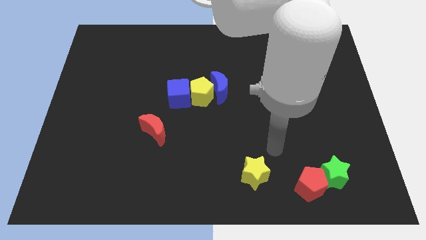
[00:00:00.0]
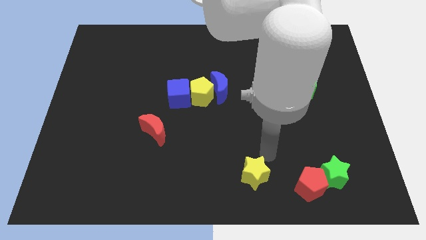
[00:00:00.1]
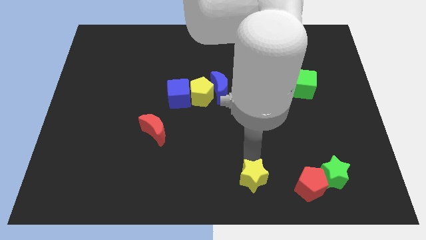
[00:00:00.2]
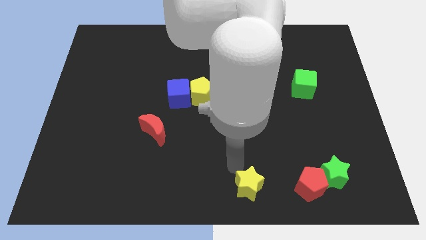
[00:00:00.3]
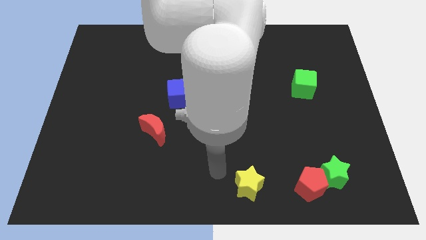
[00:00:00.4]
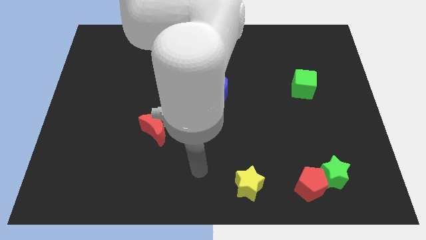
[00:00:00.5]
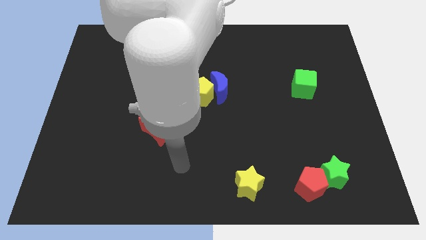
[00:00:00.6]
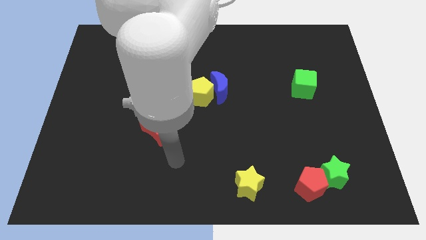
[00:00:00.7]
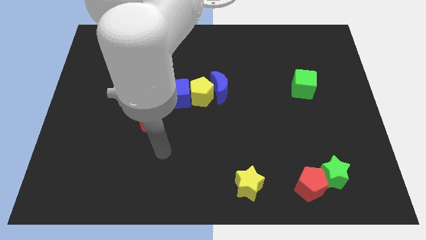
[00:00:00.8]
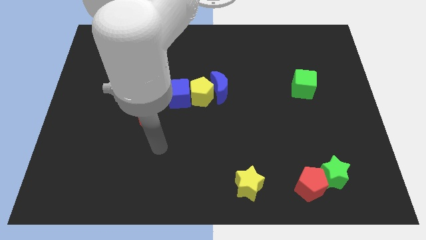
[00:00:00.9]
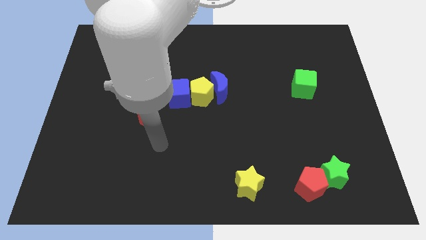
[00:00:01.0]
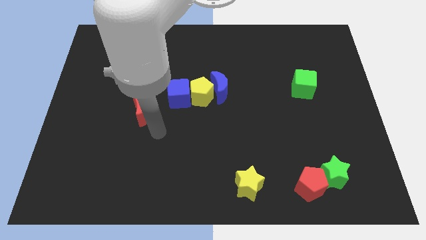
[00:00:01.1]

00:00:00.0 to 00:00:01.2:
move your arm towards the red crescent

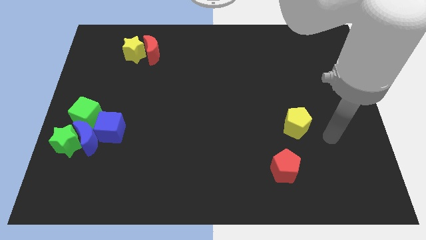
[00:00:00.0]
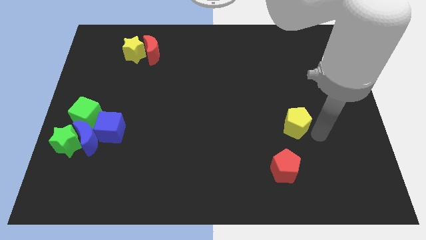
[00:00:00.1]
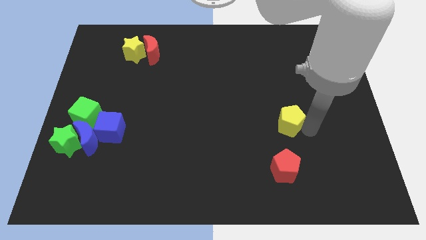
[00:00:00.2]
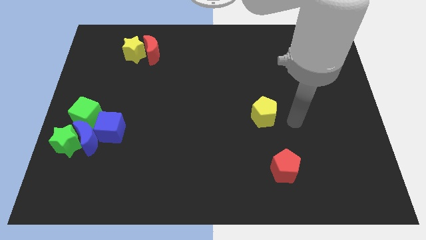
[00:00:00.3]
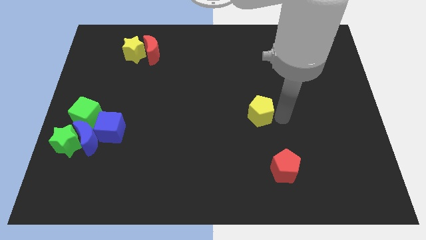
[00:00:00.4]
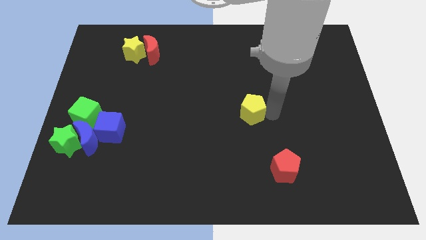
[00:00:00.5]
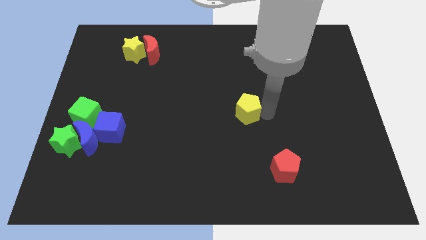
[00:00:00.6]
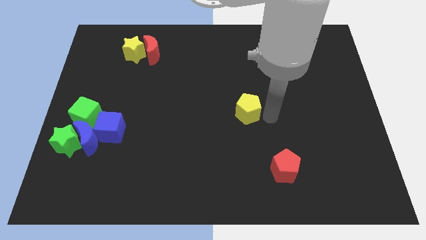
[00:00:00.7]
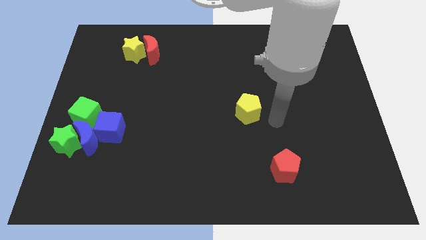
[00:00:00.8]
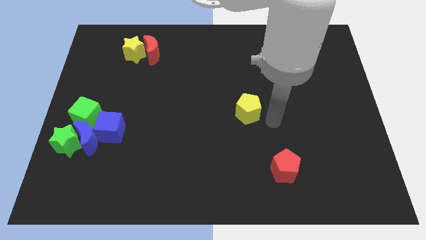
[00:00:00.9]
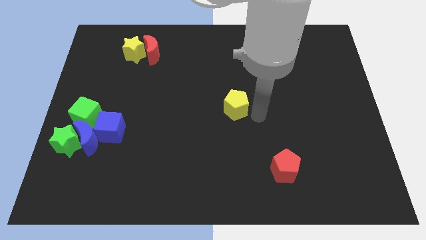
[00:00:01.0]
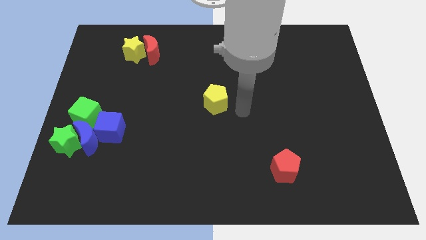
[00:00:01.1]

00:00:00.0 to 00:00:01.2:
put the yellow pentagon at the center of the board

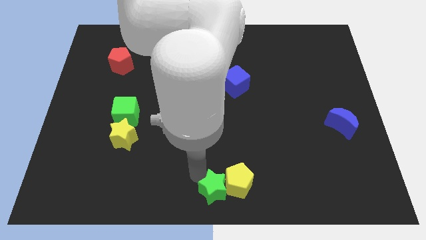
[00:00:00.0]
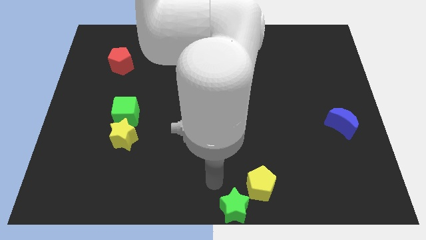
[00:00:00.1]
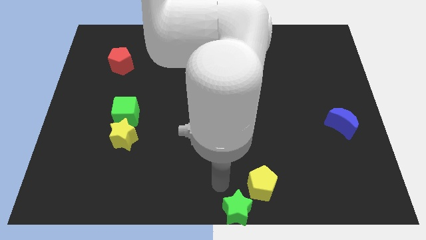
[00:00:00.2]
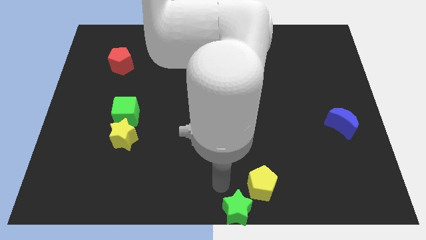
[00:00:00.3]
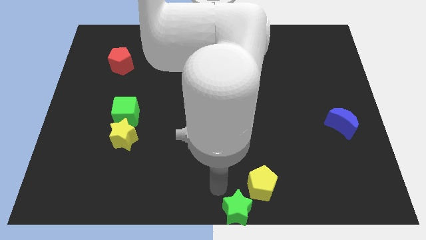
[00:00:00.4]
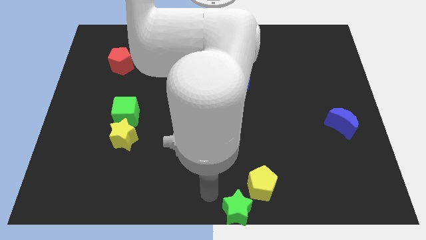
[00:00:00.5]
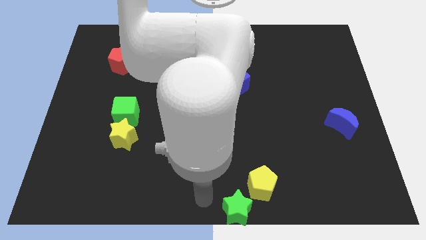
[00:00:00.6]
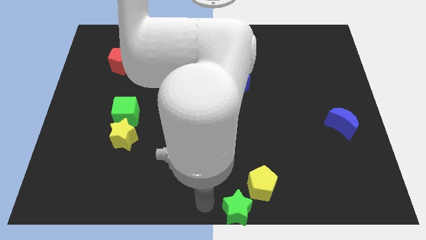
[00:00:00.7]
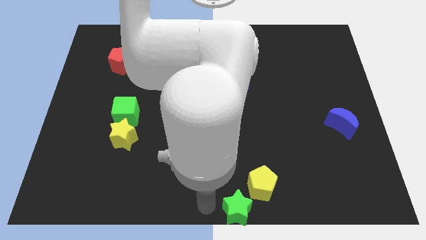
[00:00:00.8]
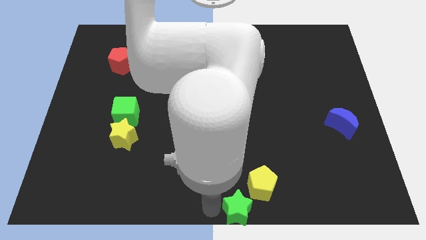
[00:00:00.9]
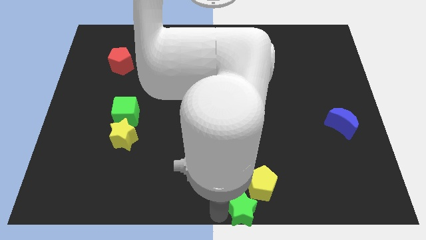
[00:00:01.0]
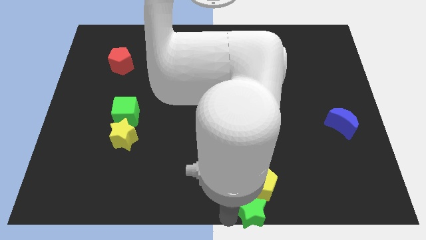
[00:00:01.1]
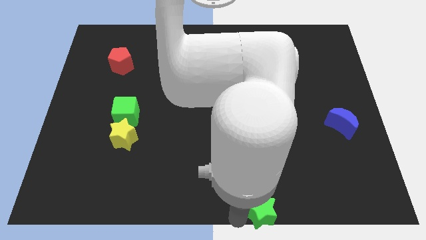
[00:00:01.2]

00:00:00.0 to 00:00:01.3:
place green star below the yellow pentagon

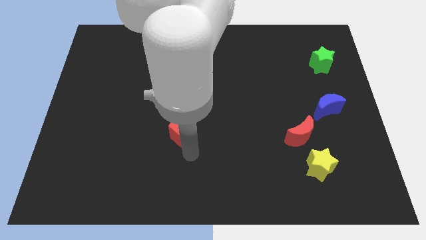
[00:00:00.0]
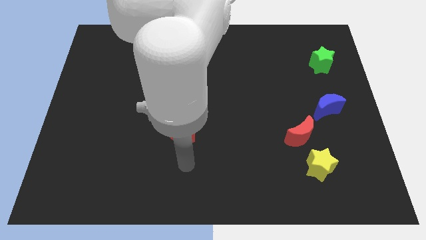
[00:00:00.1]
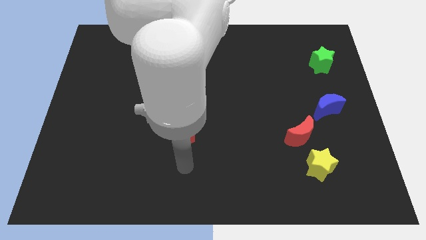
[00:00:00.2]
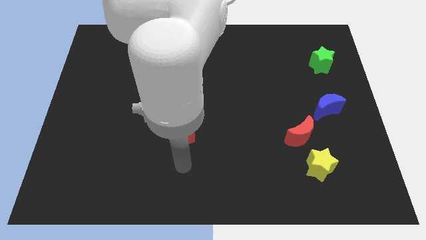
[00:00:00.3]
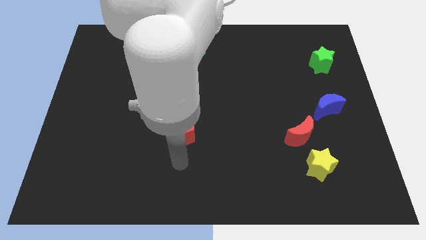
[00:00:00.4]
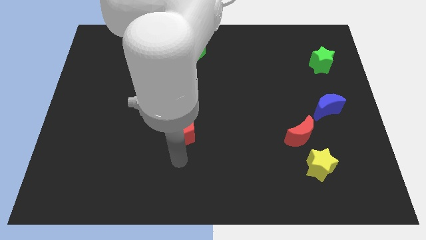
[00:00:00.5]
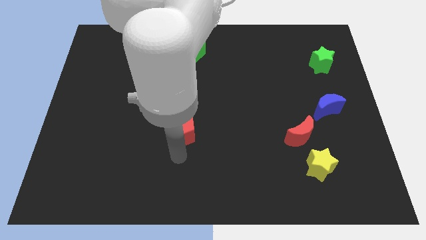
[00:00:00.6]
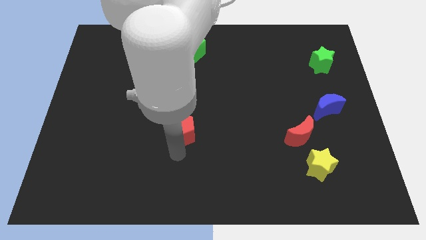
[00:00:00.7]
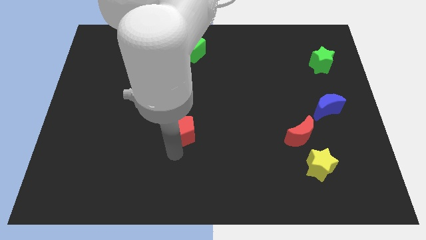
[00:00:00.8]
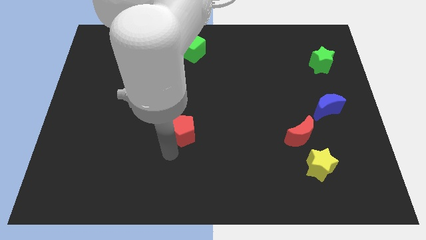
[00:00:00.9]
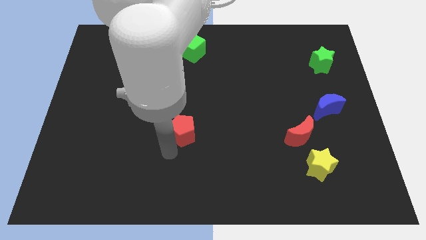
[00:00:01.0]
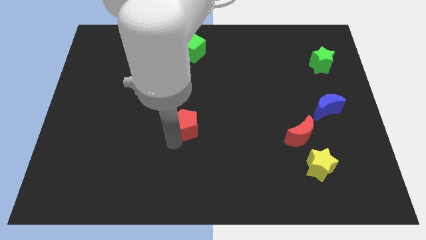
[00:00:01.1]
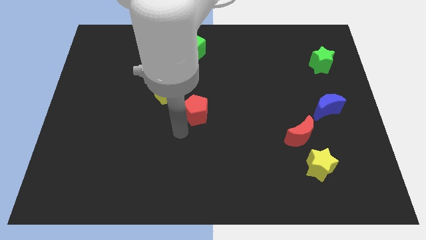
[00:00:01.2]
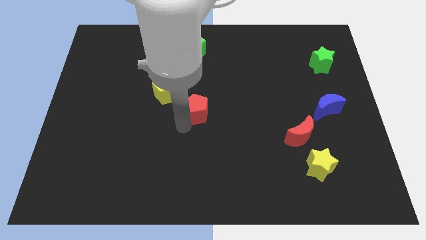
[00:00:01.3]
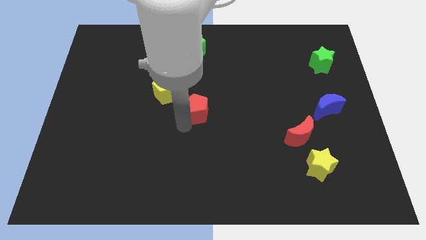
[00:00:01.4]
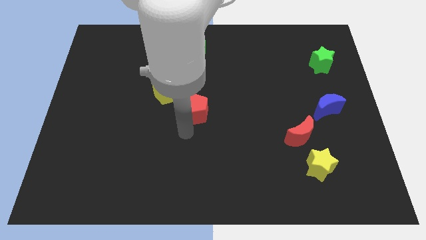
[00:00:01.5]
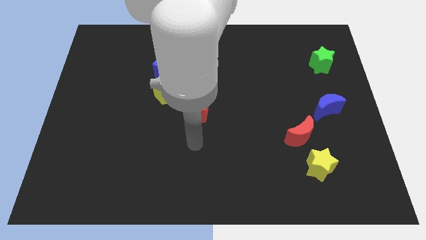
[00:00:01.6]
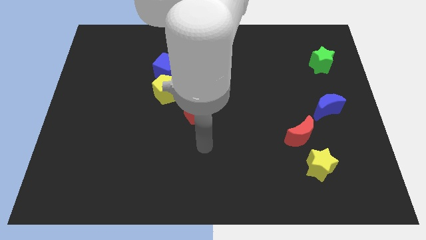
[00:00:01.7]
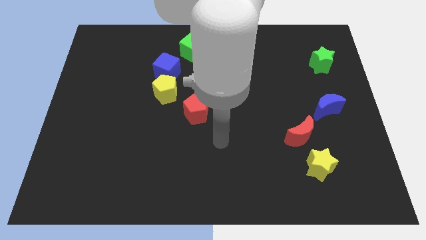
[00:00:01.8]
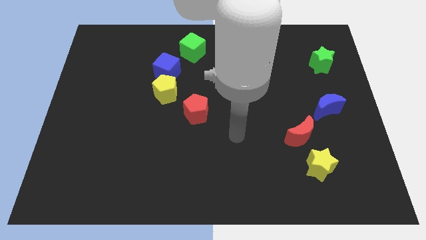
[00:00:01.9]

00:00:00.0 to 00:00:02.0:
move the red pentagon diagonally top left to the red moon

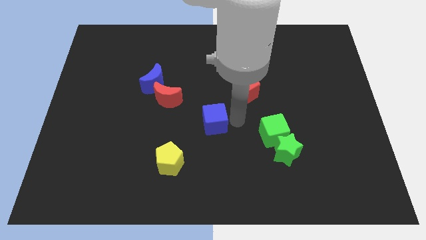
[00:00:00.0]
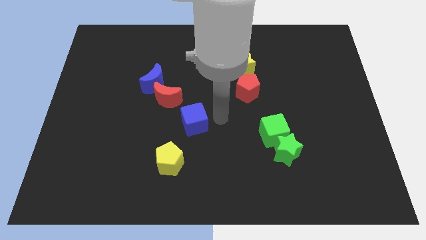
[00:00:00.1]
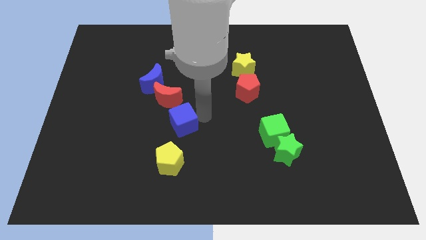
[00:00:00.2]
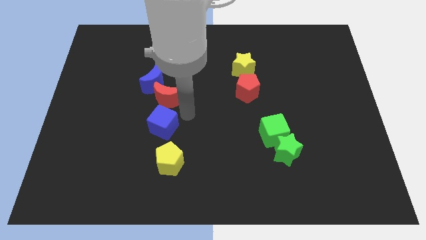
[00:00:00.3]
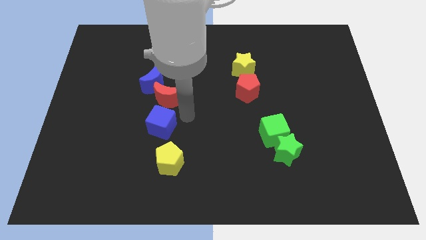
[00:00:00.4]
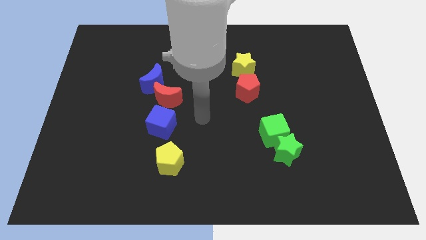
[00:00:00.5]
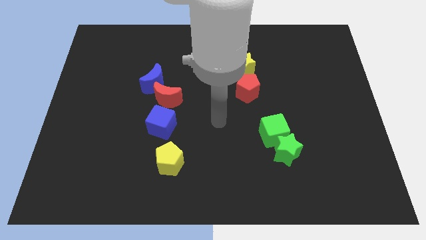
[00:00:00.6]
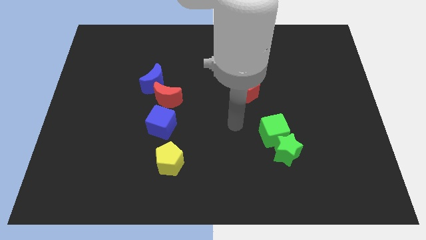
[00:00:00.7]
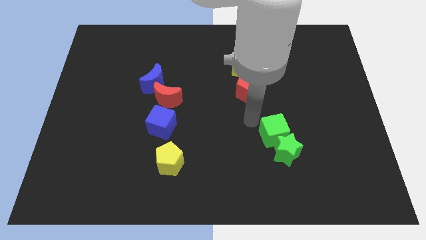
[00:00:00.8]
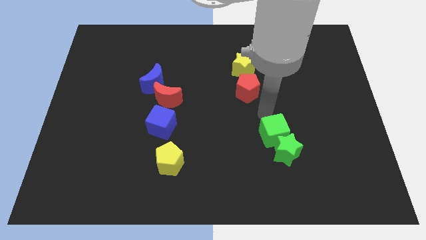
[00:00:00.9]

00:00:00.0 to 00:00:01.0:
place blue cube to the bottom of the red crescent

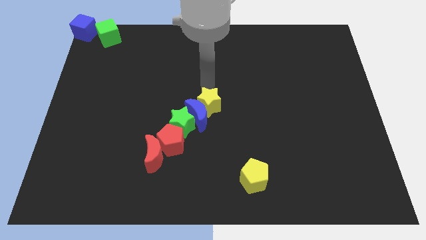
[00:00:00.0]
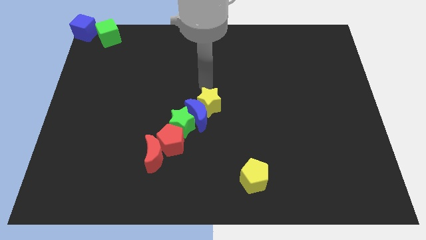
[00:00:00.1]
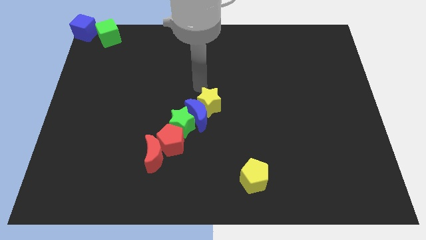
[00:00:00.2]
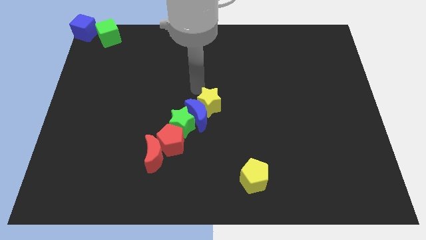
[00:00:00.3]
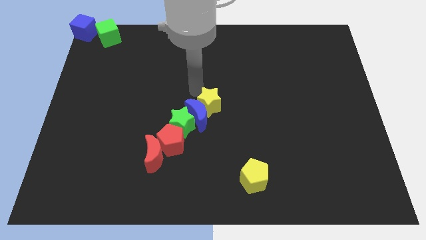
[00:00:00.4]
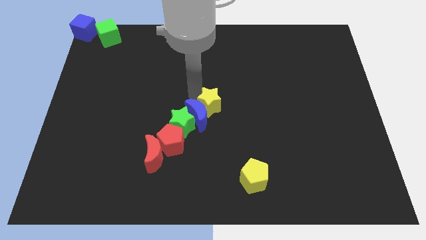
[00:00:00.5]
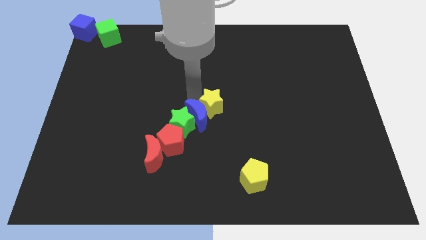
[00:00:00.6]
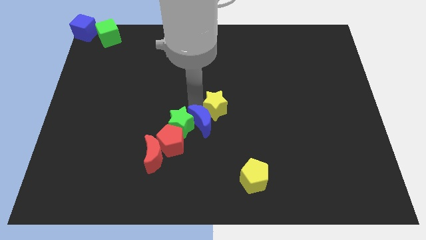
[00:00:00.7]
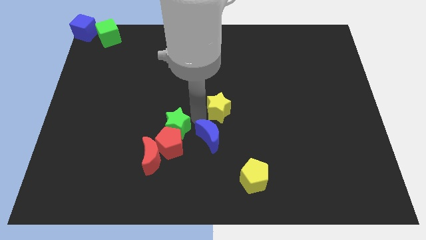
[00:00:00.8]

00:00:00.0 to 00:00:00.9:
point your arm between green star and yellow star

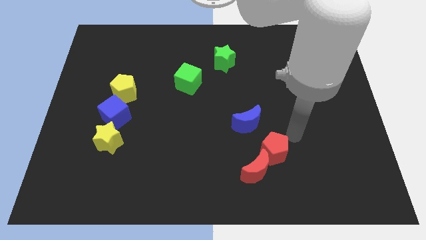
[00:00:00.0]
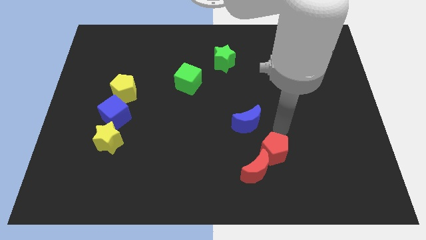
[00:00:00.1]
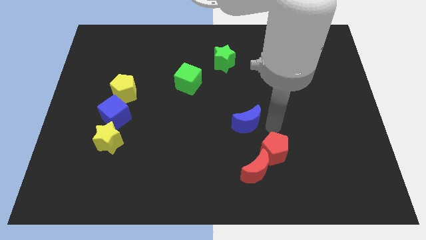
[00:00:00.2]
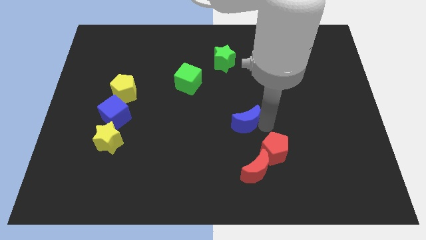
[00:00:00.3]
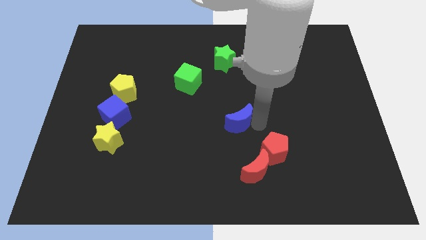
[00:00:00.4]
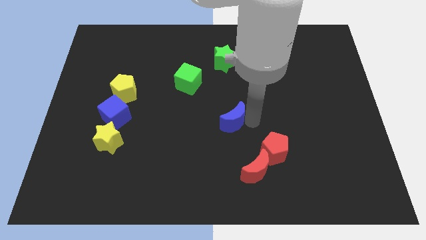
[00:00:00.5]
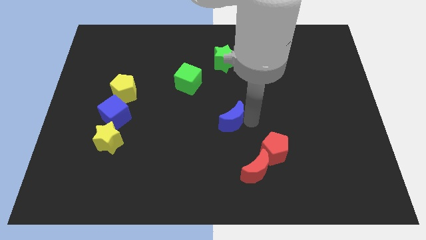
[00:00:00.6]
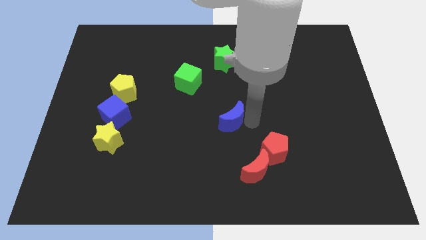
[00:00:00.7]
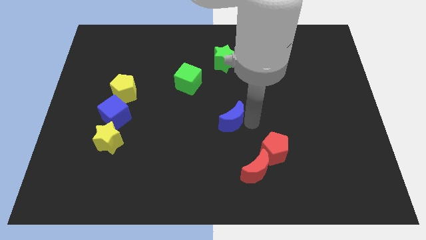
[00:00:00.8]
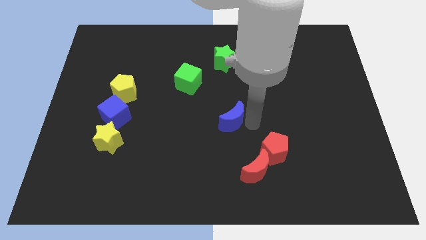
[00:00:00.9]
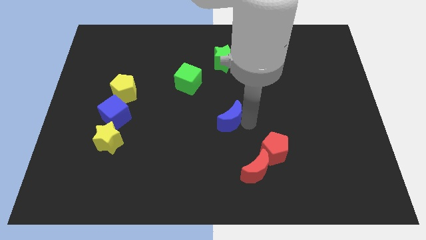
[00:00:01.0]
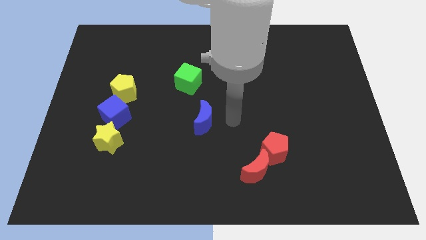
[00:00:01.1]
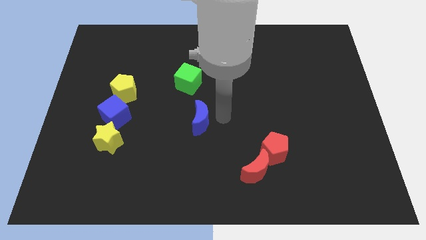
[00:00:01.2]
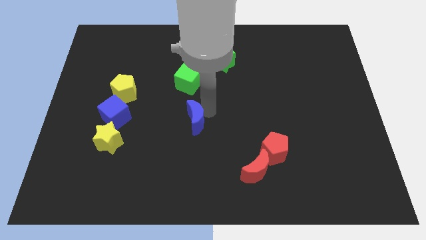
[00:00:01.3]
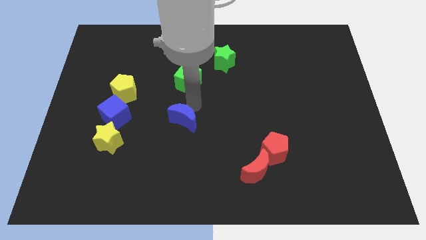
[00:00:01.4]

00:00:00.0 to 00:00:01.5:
place the blue moon vertical to the green cube
